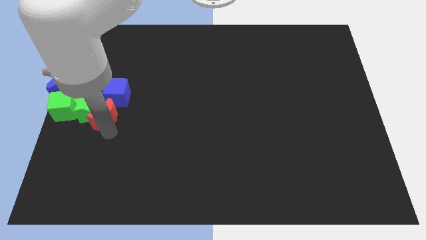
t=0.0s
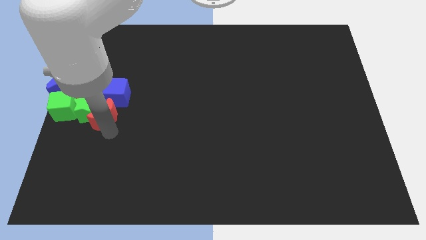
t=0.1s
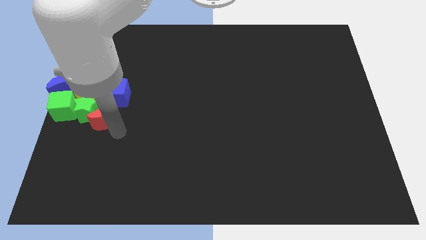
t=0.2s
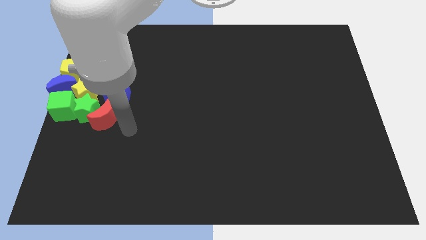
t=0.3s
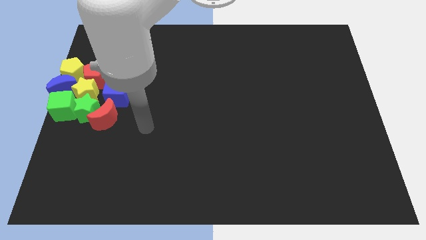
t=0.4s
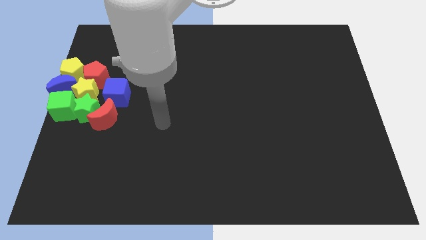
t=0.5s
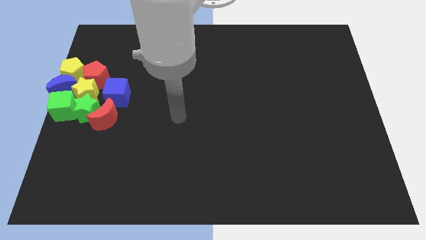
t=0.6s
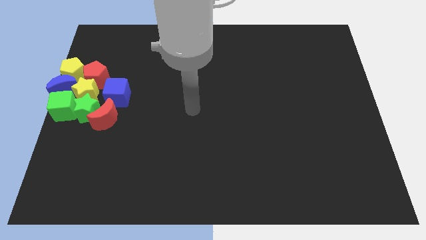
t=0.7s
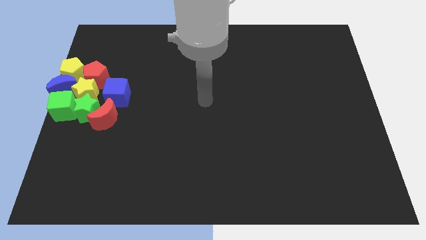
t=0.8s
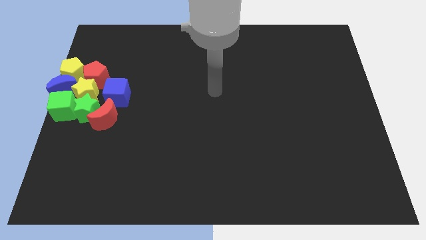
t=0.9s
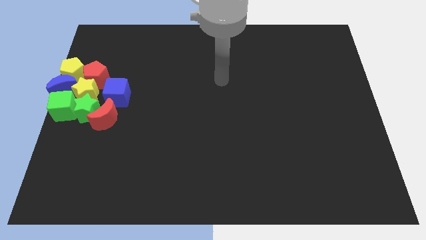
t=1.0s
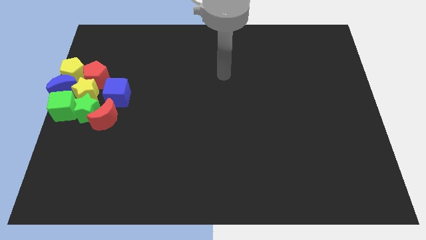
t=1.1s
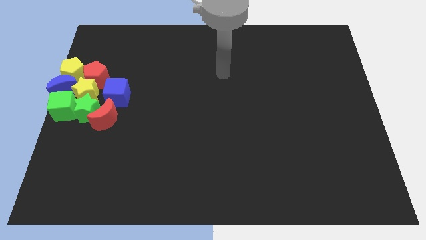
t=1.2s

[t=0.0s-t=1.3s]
move your arm away from the red crescent

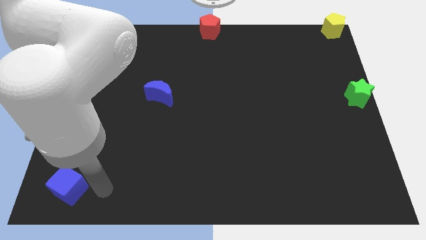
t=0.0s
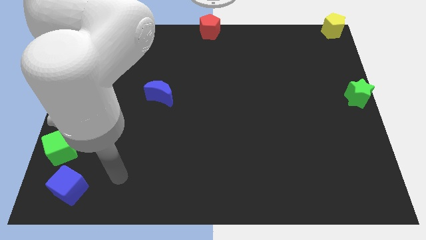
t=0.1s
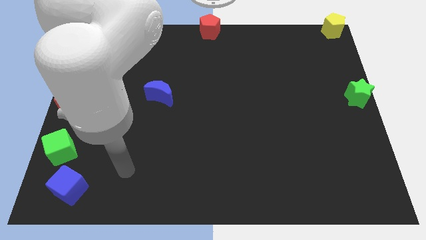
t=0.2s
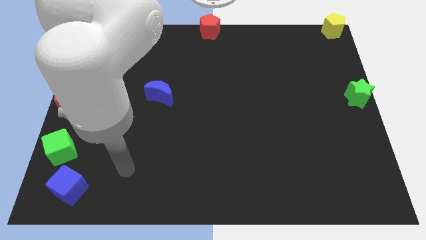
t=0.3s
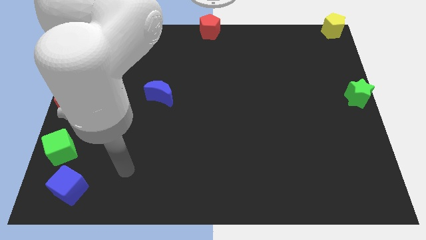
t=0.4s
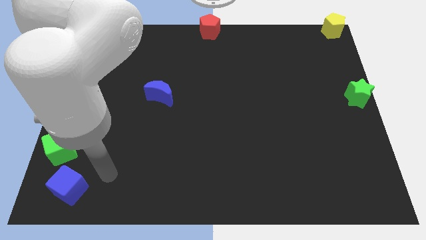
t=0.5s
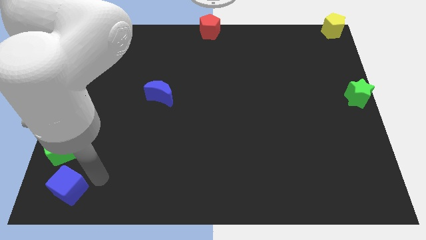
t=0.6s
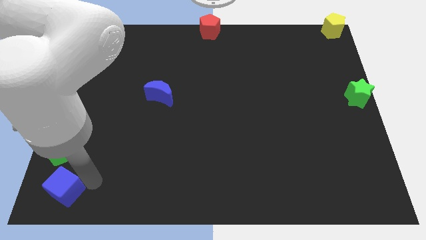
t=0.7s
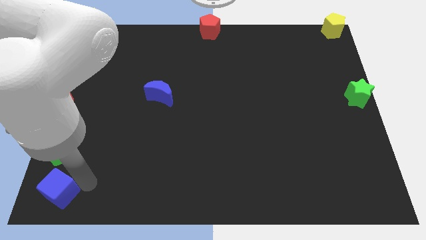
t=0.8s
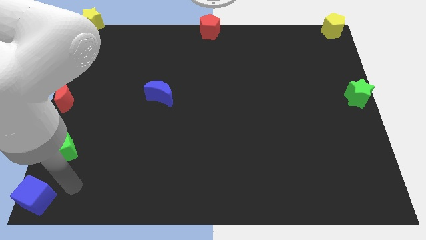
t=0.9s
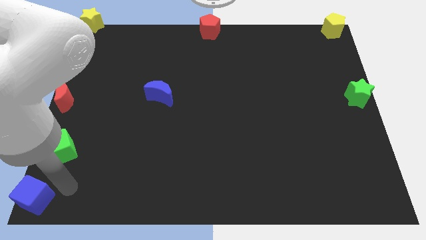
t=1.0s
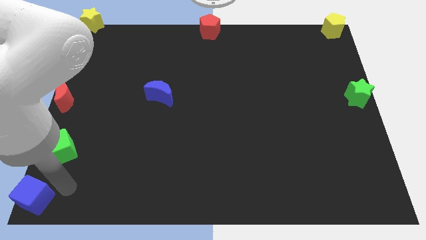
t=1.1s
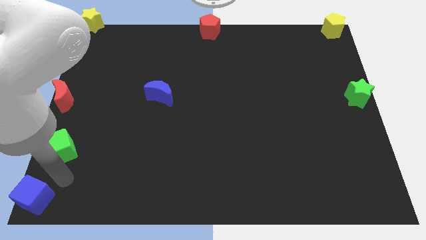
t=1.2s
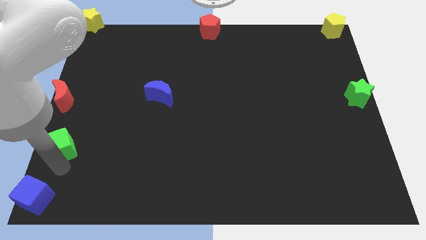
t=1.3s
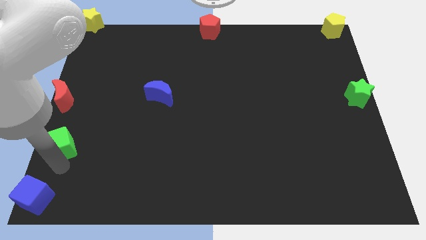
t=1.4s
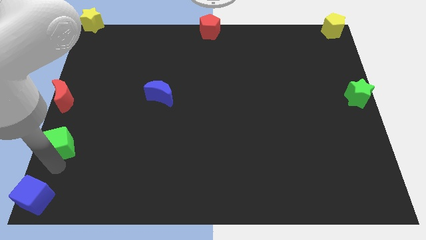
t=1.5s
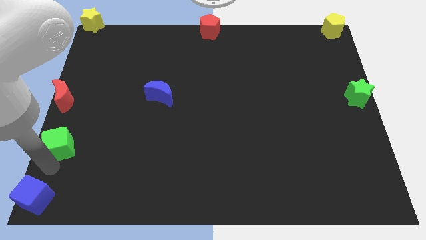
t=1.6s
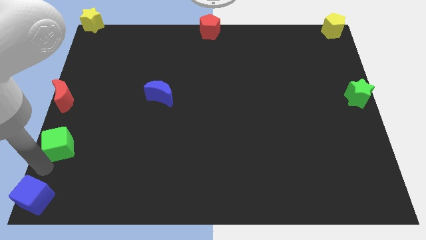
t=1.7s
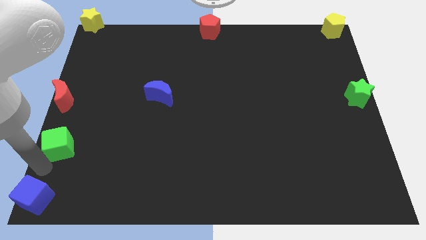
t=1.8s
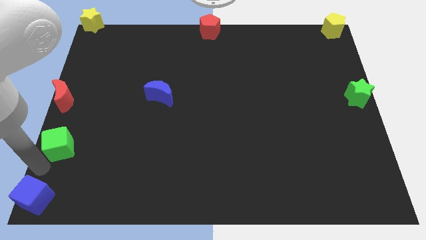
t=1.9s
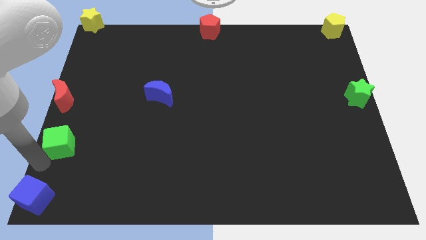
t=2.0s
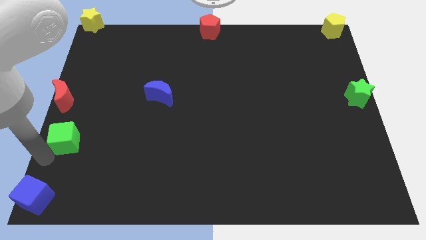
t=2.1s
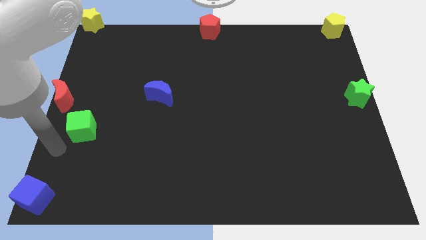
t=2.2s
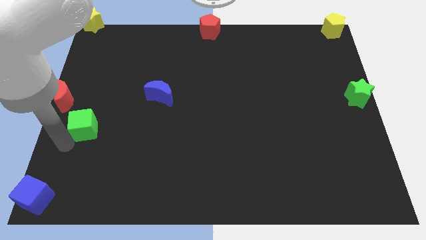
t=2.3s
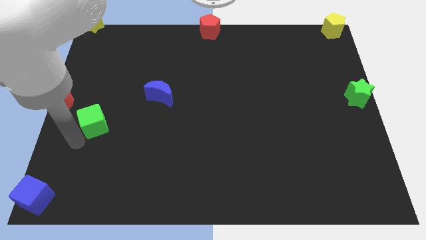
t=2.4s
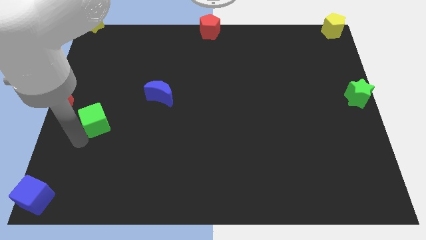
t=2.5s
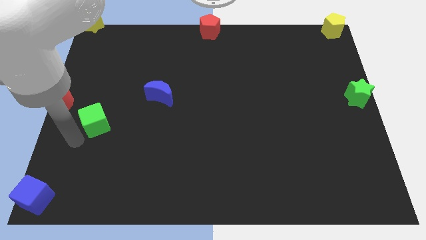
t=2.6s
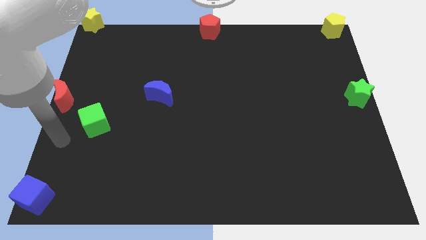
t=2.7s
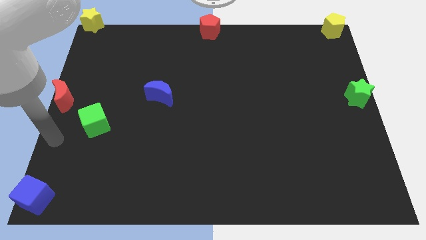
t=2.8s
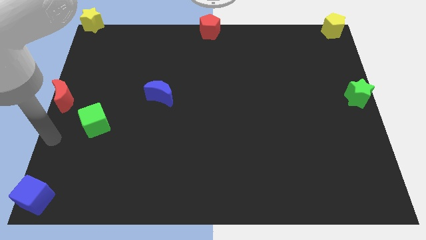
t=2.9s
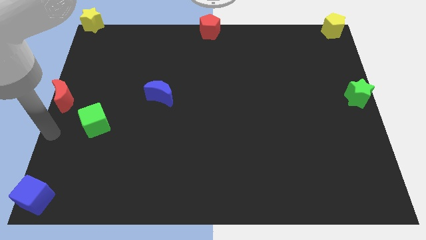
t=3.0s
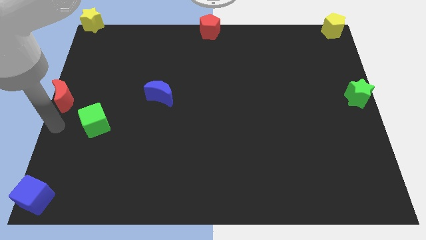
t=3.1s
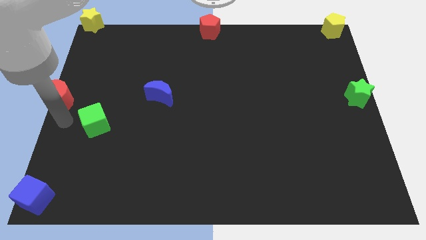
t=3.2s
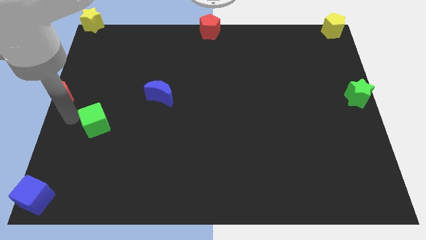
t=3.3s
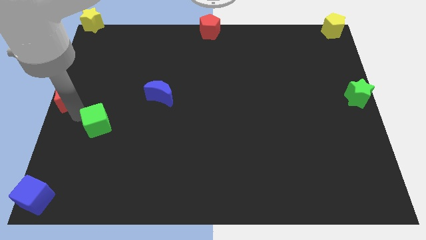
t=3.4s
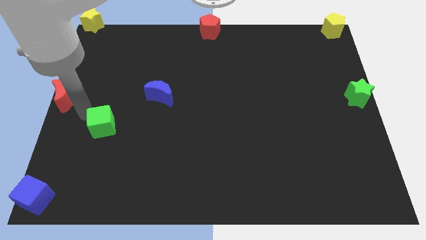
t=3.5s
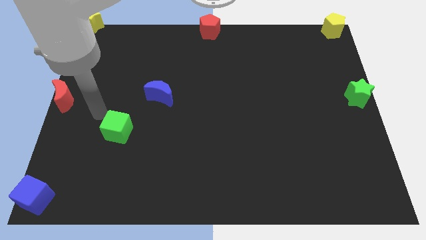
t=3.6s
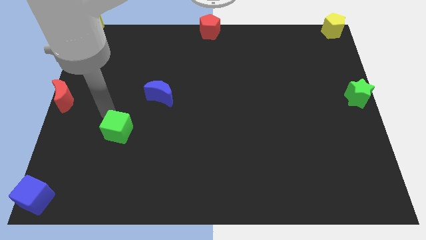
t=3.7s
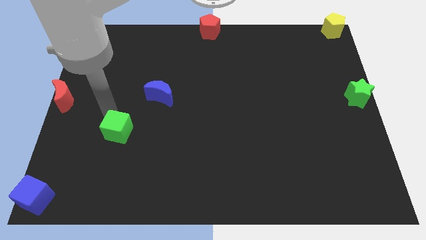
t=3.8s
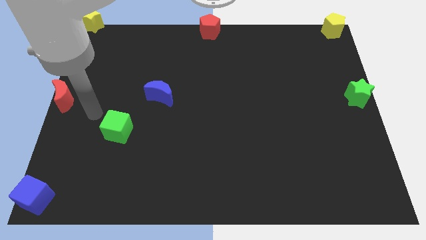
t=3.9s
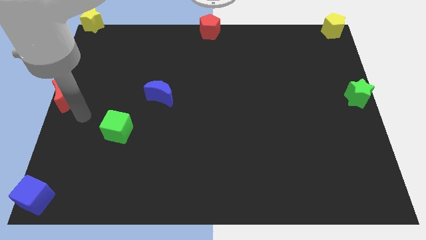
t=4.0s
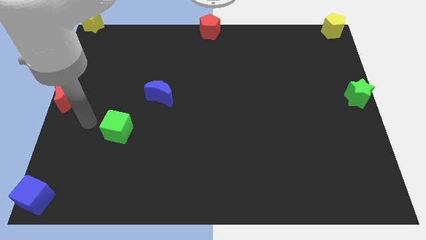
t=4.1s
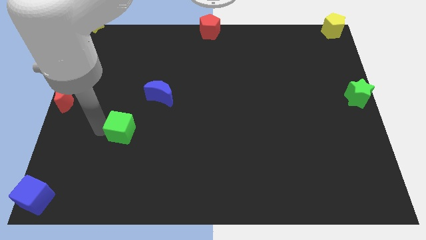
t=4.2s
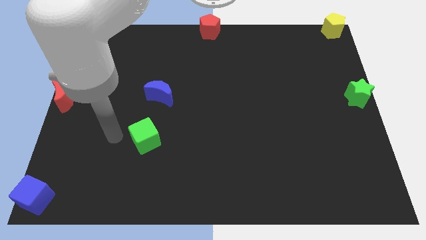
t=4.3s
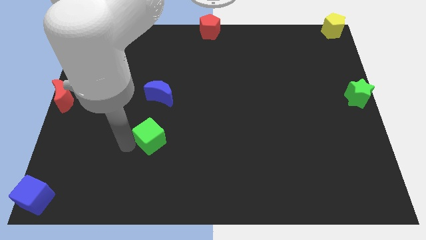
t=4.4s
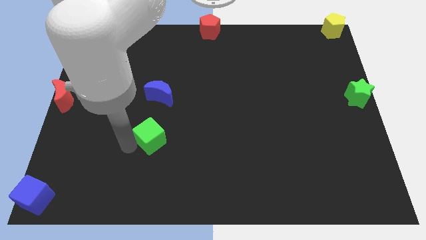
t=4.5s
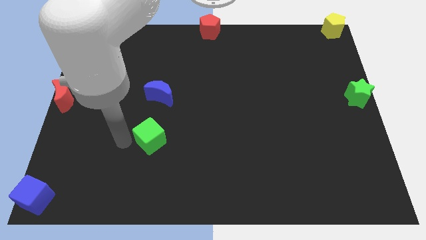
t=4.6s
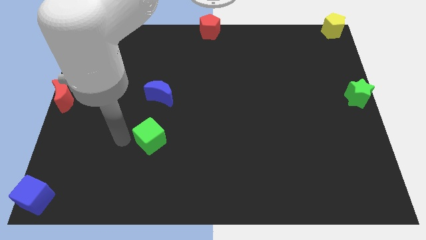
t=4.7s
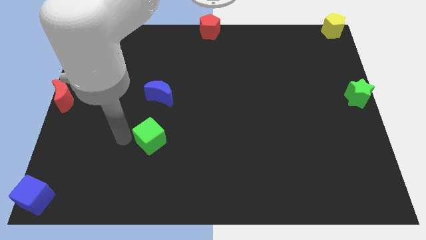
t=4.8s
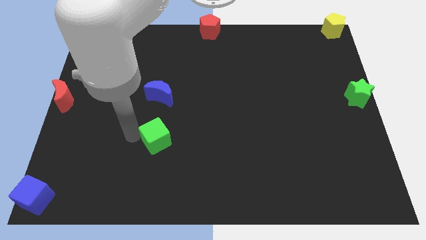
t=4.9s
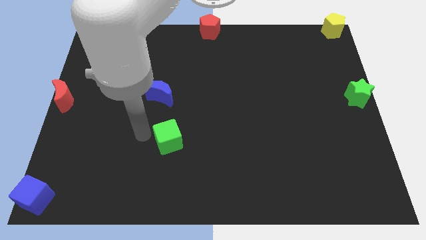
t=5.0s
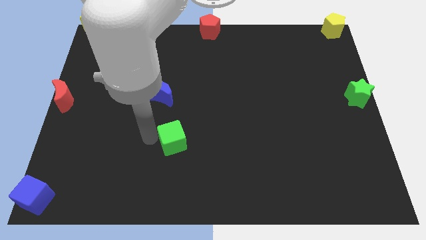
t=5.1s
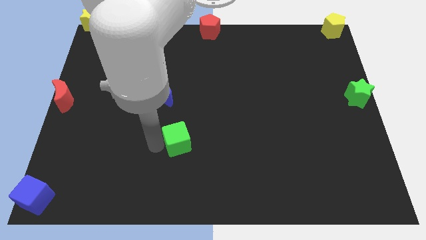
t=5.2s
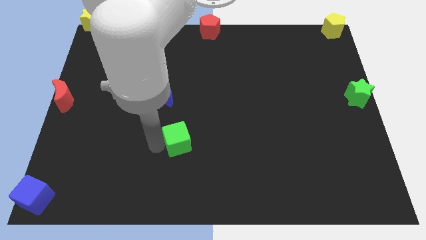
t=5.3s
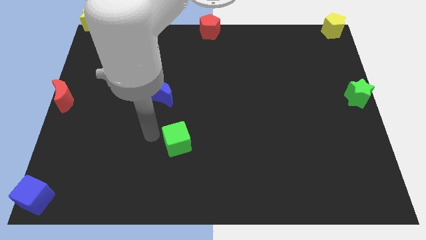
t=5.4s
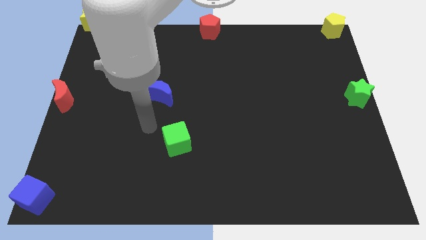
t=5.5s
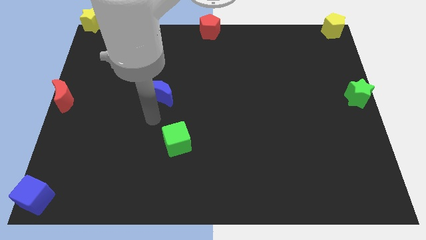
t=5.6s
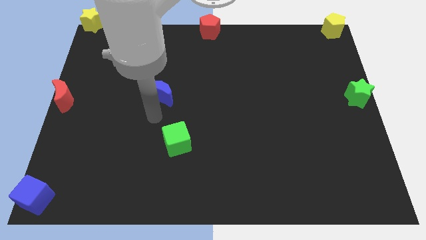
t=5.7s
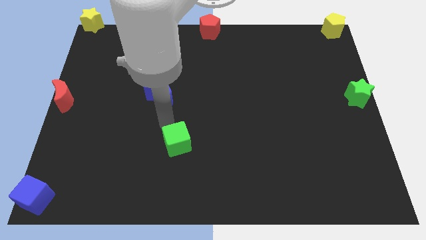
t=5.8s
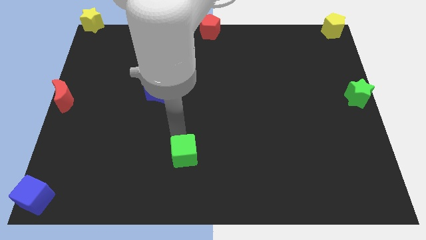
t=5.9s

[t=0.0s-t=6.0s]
move the green cube below the blue crescent

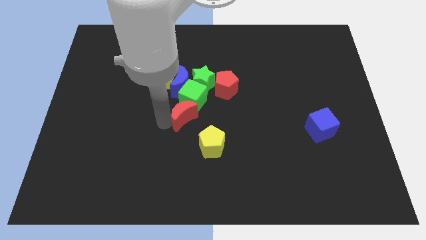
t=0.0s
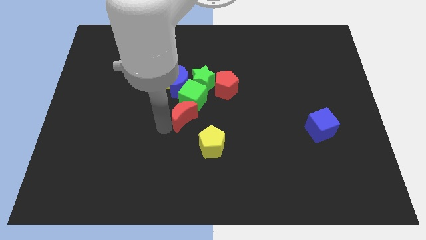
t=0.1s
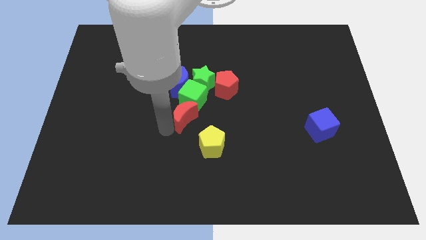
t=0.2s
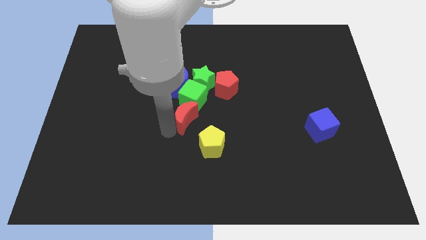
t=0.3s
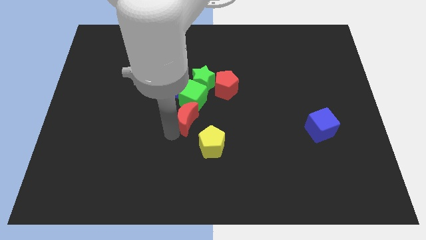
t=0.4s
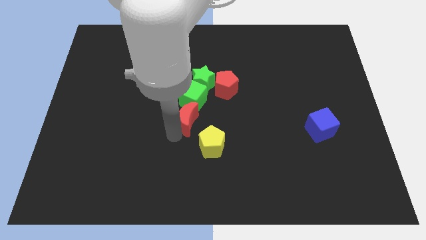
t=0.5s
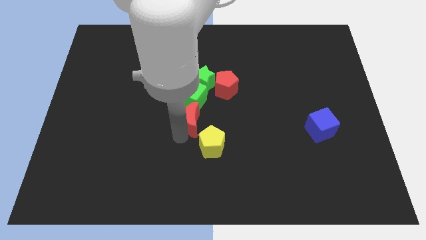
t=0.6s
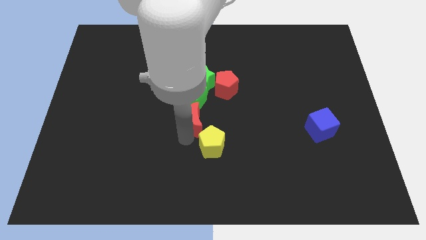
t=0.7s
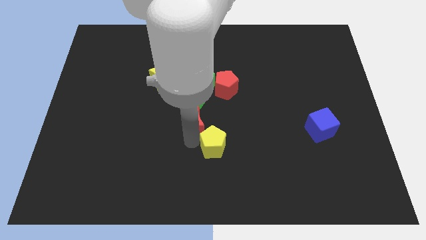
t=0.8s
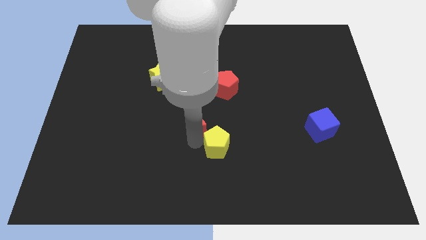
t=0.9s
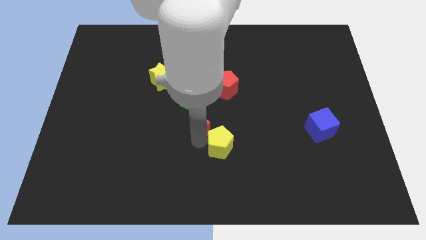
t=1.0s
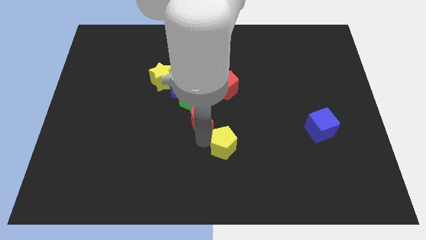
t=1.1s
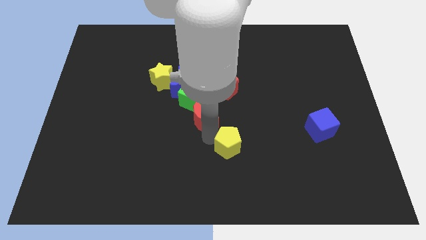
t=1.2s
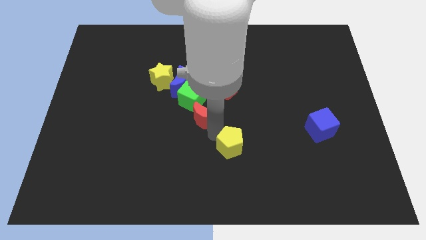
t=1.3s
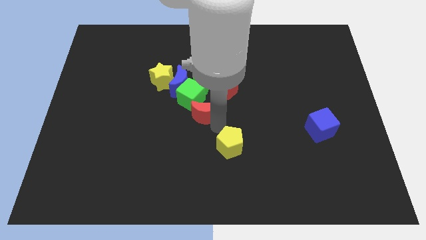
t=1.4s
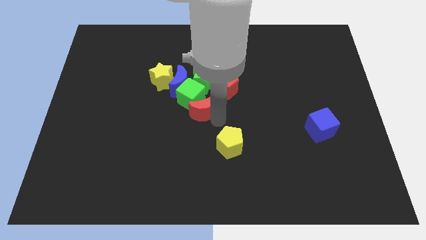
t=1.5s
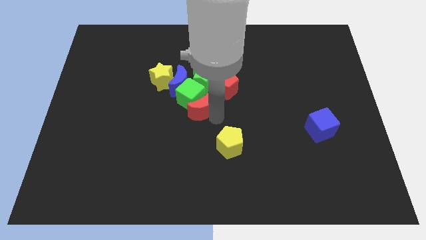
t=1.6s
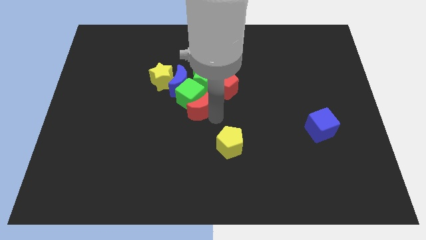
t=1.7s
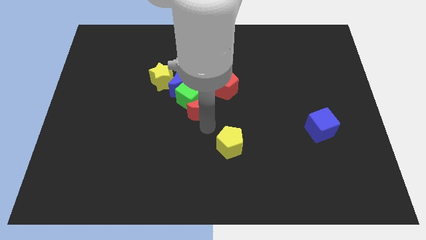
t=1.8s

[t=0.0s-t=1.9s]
drag the red crescent to the bottom right side of the green cube

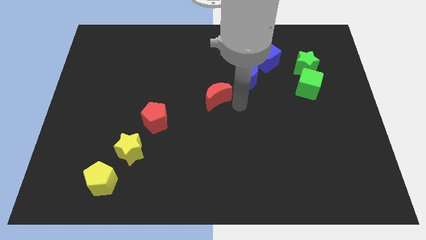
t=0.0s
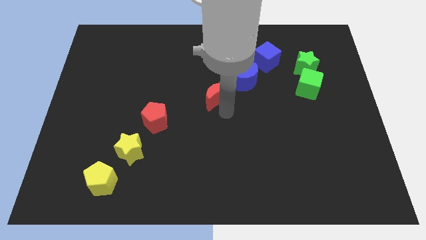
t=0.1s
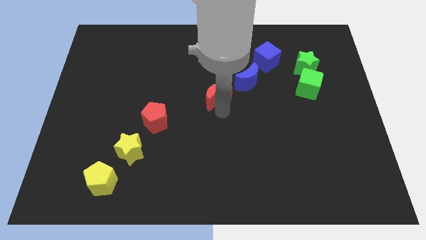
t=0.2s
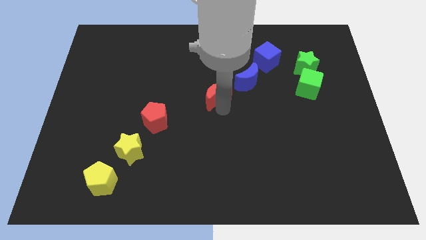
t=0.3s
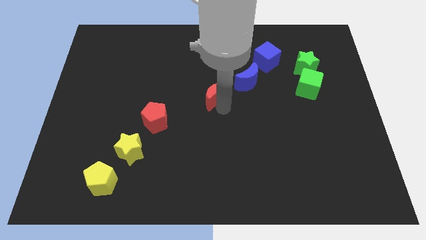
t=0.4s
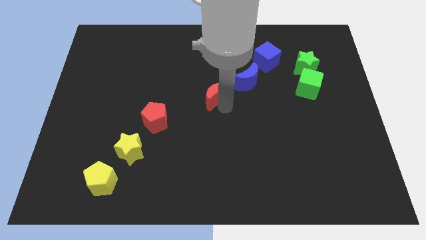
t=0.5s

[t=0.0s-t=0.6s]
place your arm below red crescent
